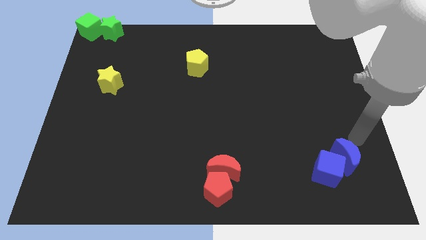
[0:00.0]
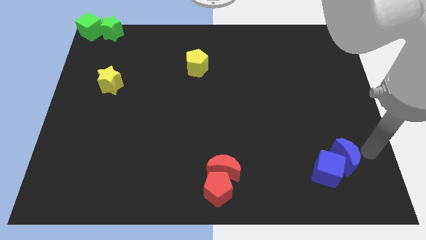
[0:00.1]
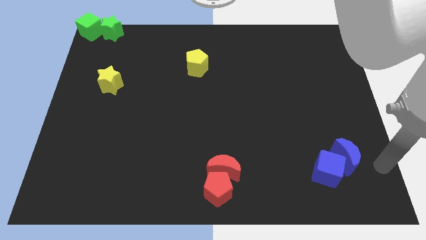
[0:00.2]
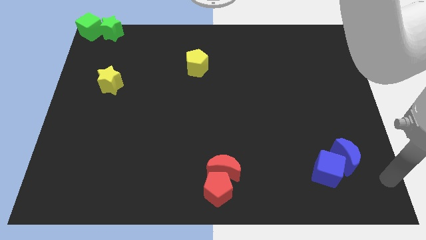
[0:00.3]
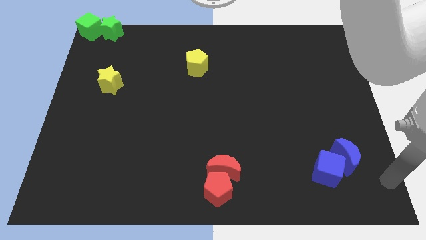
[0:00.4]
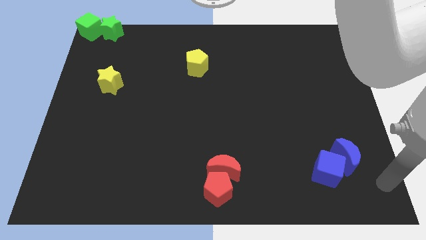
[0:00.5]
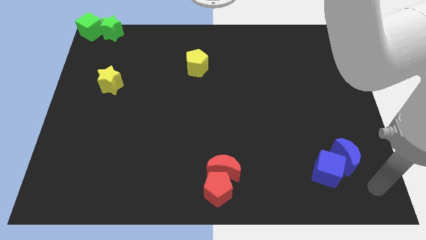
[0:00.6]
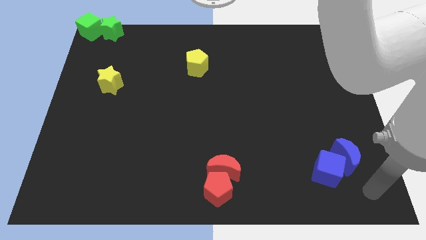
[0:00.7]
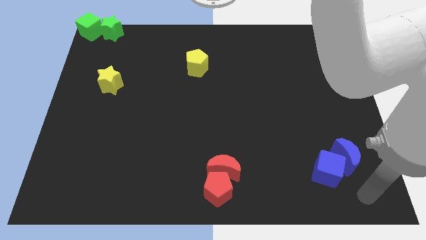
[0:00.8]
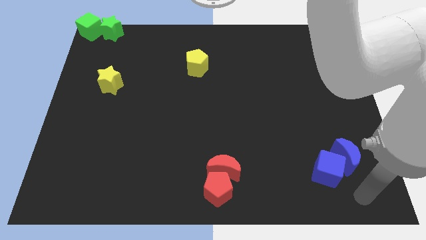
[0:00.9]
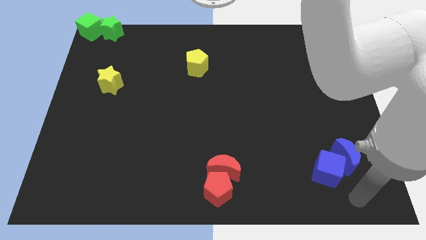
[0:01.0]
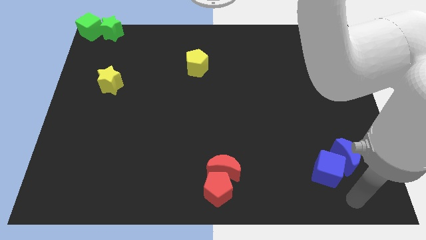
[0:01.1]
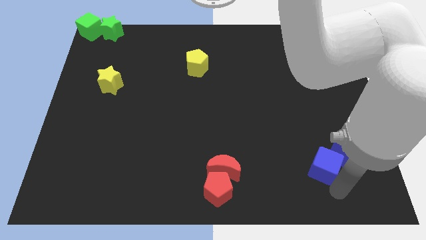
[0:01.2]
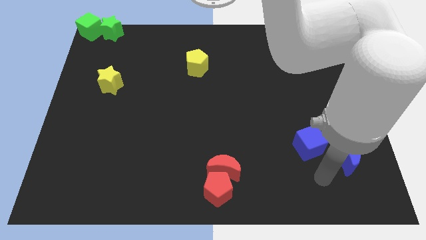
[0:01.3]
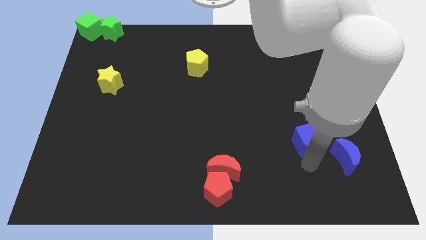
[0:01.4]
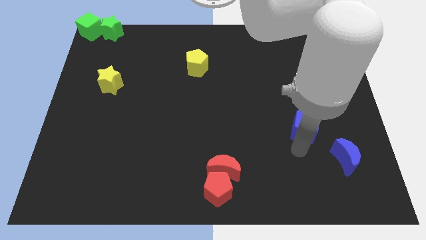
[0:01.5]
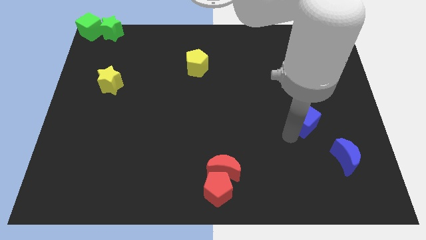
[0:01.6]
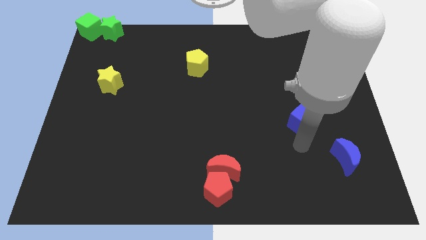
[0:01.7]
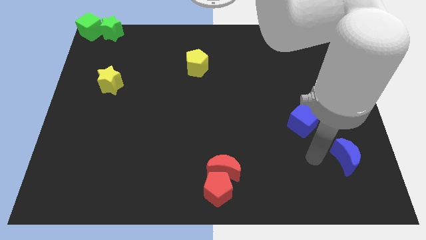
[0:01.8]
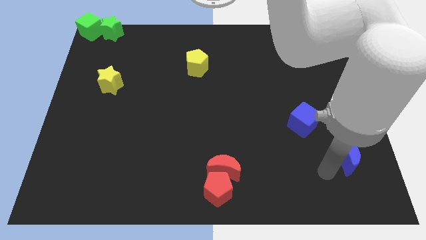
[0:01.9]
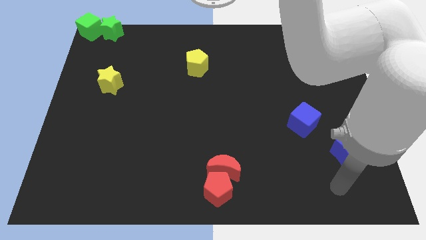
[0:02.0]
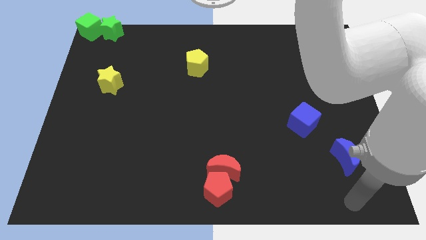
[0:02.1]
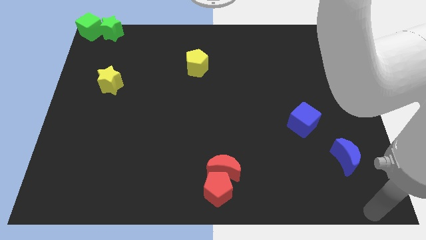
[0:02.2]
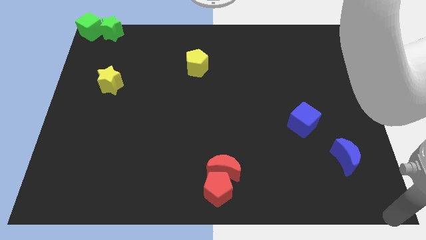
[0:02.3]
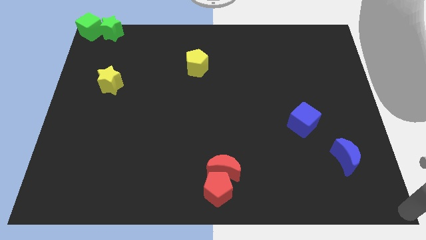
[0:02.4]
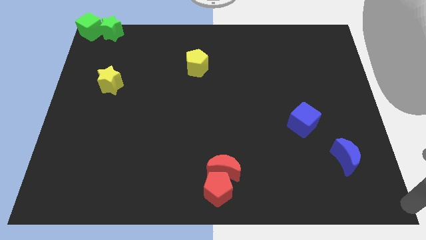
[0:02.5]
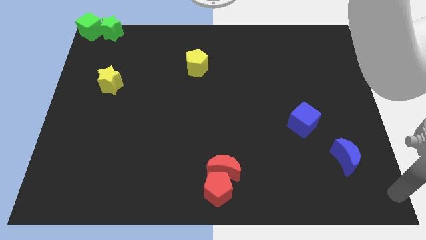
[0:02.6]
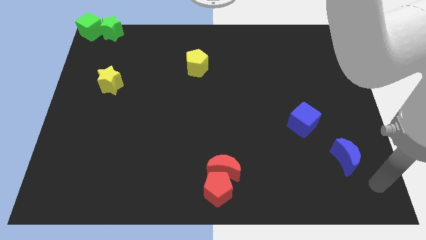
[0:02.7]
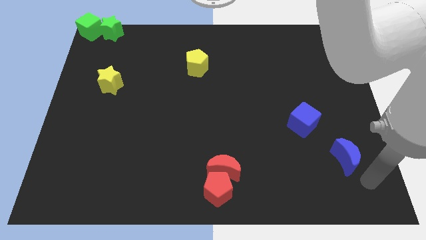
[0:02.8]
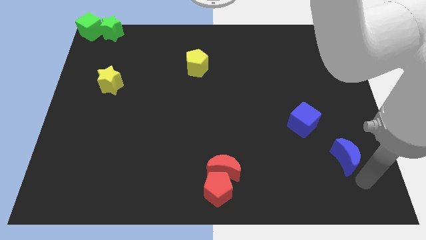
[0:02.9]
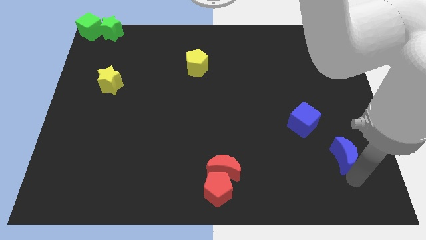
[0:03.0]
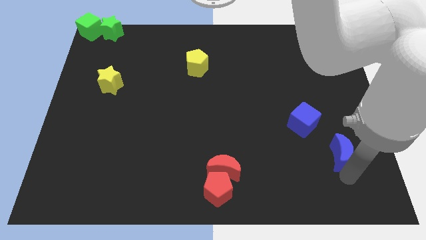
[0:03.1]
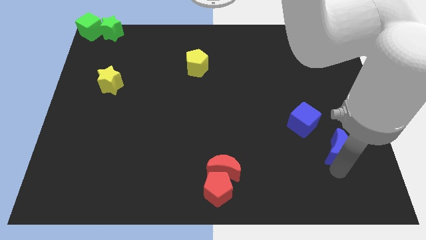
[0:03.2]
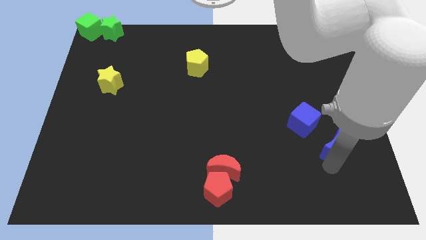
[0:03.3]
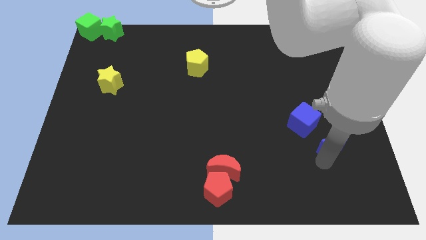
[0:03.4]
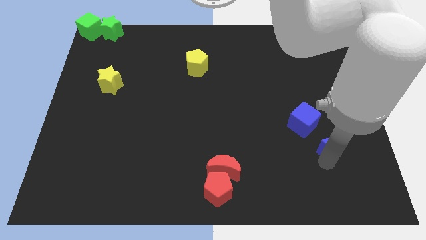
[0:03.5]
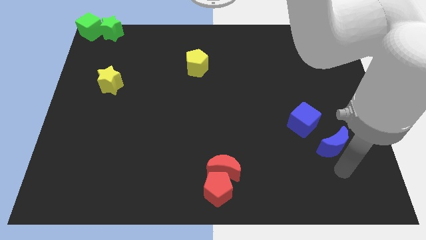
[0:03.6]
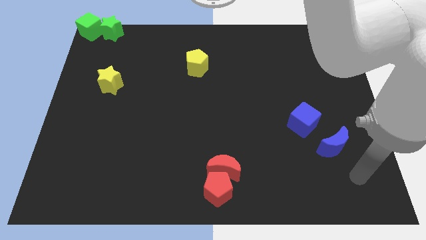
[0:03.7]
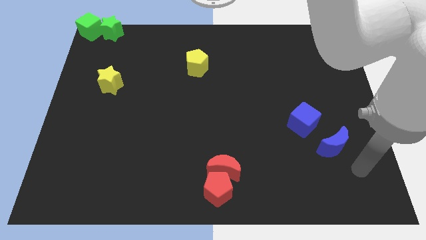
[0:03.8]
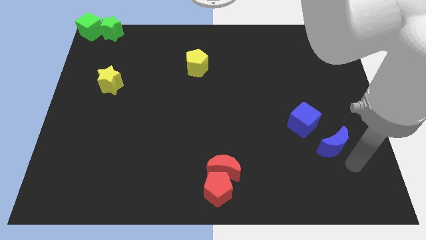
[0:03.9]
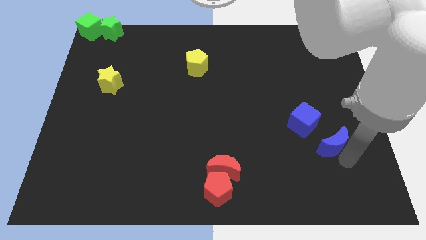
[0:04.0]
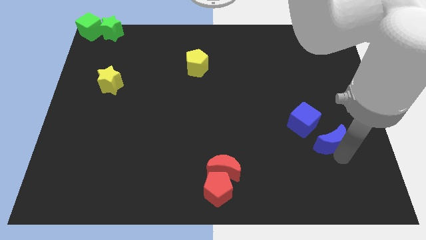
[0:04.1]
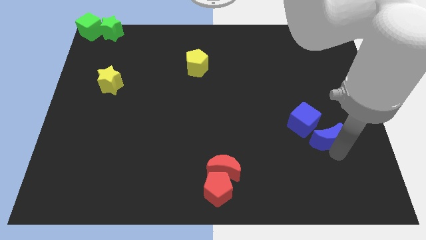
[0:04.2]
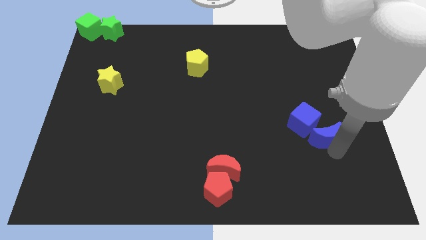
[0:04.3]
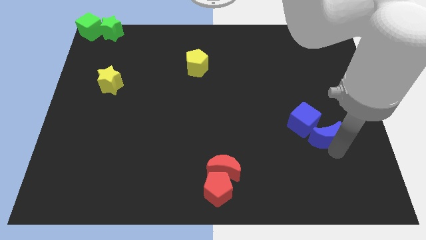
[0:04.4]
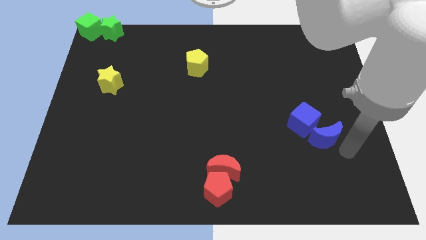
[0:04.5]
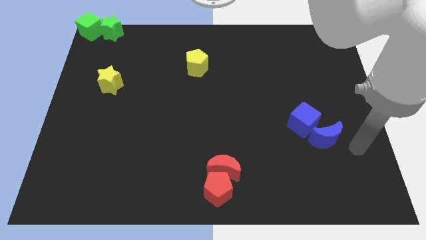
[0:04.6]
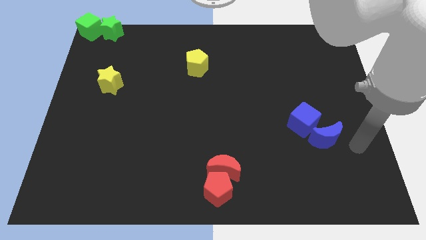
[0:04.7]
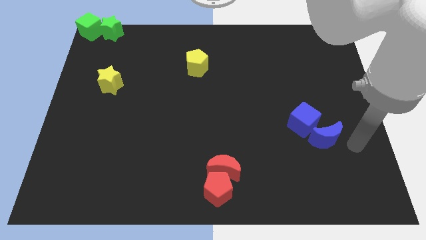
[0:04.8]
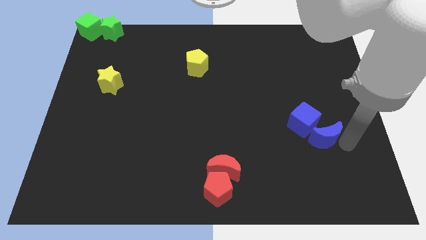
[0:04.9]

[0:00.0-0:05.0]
drag both the blue blocks diagonally on the top right side of the red blocks

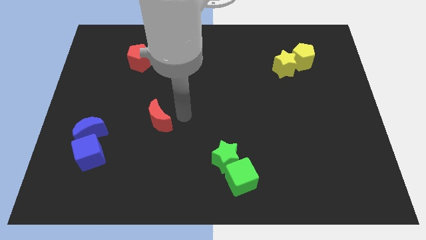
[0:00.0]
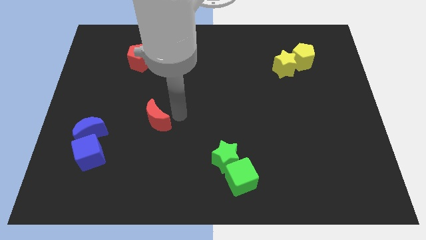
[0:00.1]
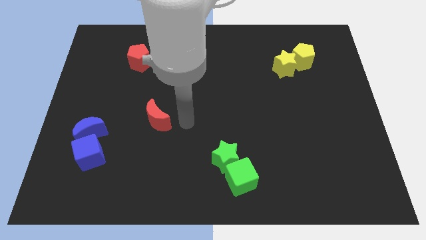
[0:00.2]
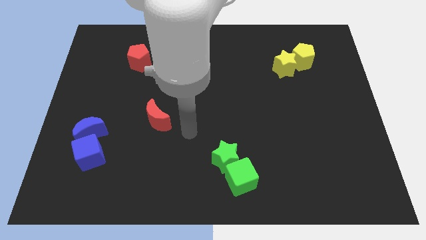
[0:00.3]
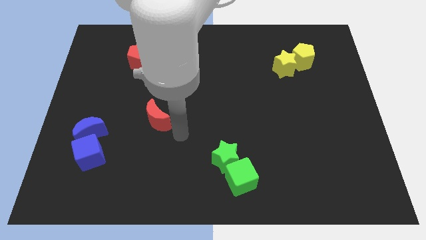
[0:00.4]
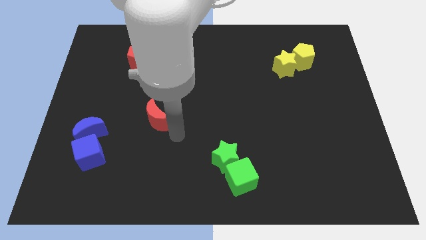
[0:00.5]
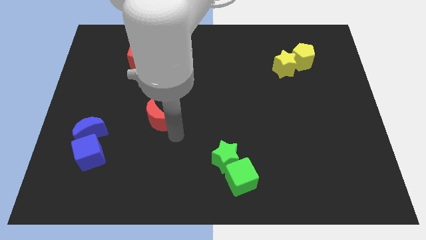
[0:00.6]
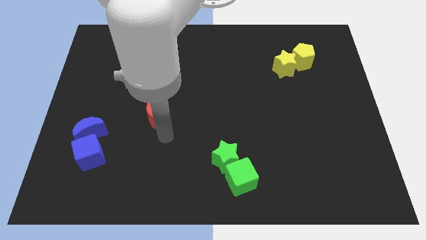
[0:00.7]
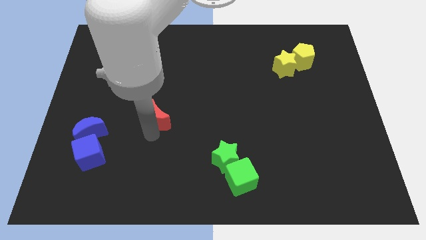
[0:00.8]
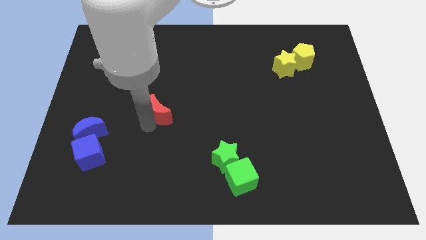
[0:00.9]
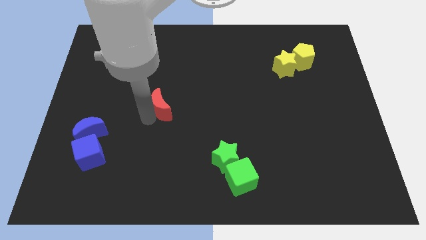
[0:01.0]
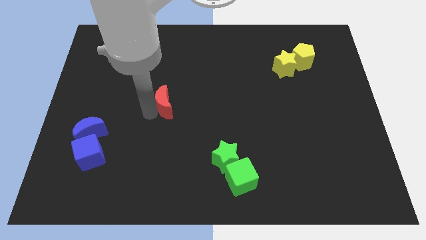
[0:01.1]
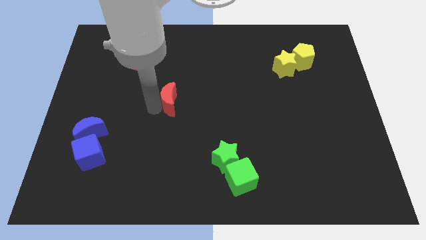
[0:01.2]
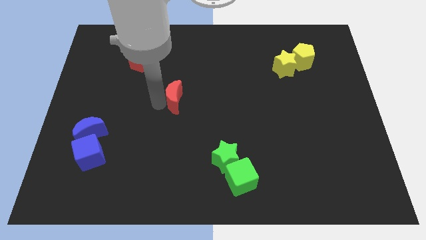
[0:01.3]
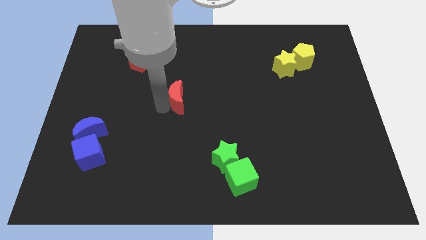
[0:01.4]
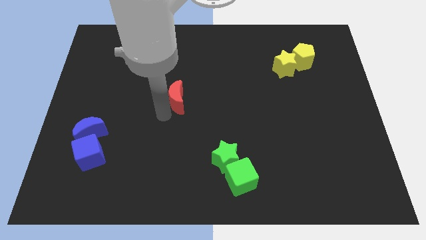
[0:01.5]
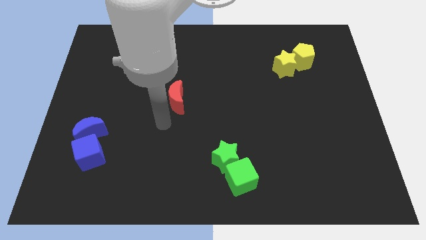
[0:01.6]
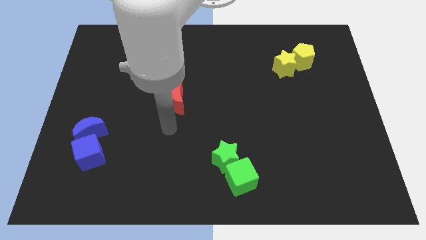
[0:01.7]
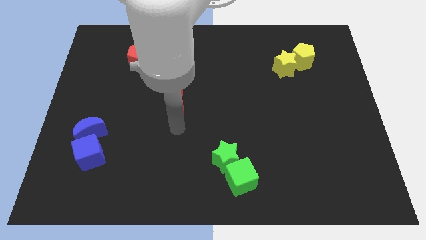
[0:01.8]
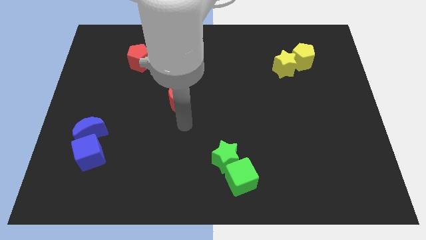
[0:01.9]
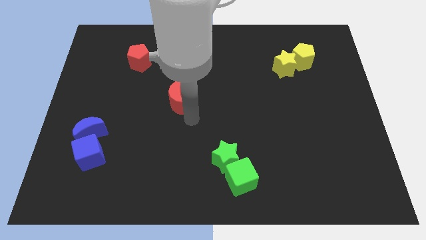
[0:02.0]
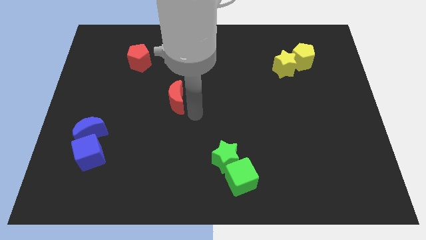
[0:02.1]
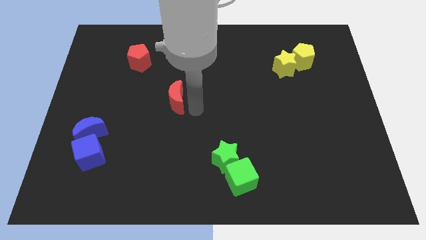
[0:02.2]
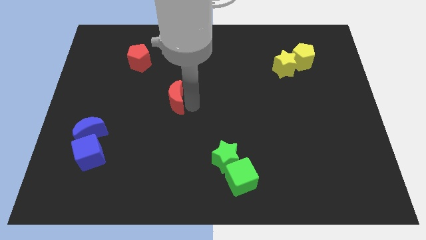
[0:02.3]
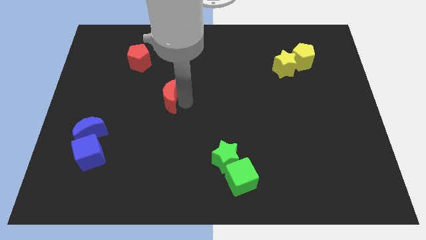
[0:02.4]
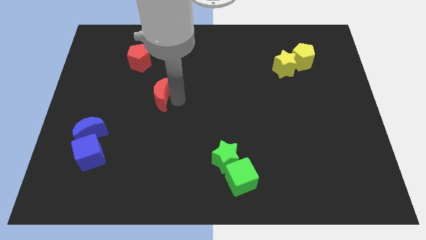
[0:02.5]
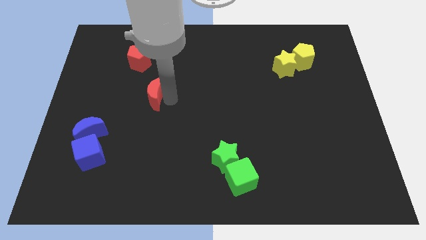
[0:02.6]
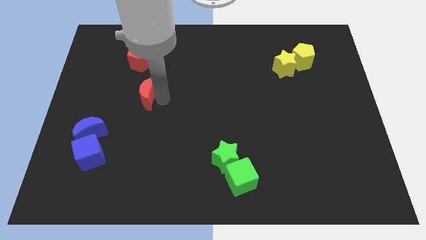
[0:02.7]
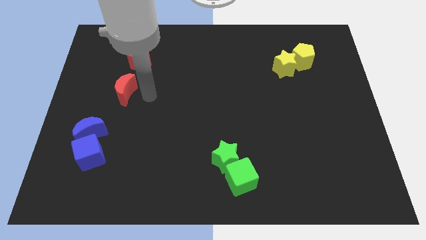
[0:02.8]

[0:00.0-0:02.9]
move the red crescent to the bottom of the red pentagon

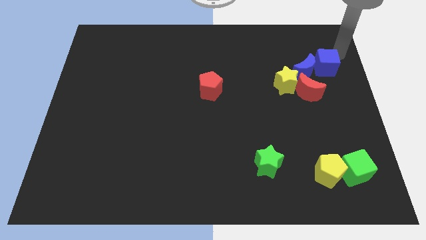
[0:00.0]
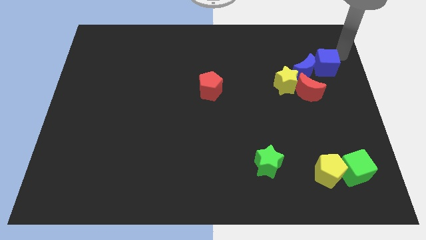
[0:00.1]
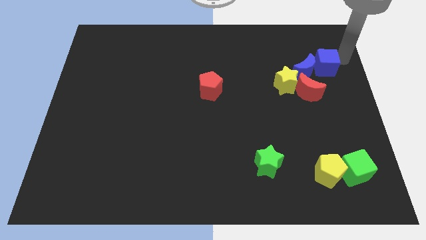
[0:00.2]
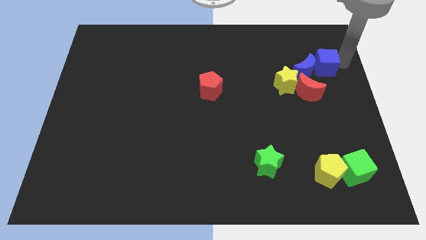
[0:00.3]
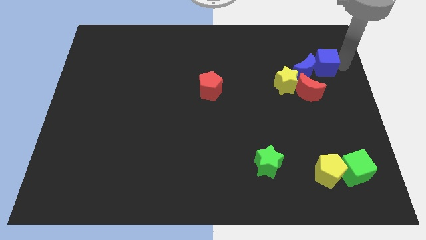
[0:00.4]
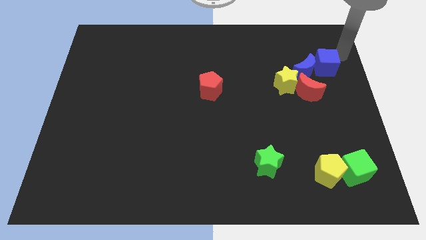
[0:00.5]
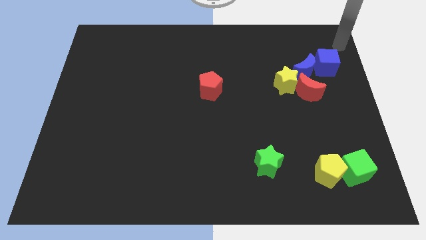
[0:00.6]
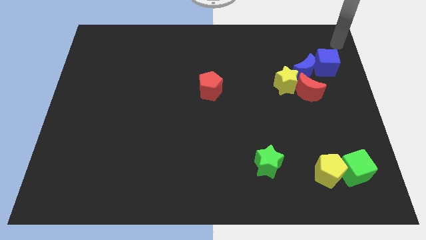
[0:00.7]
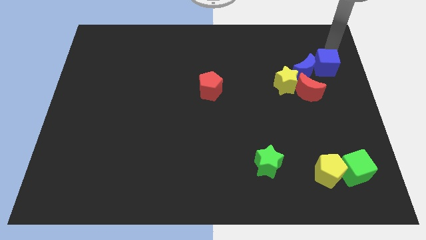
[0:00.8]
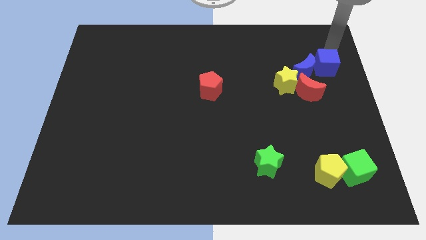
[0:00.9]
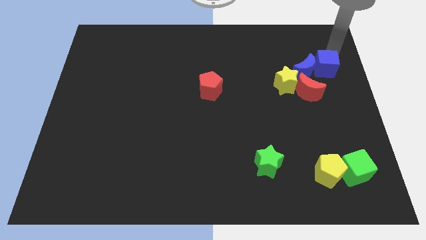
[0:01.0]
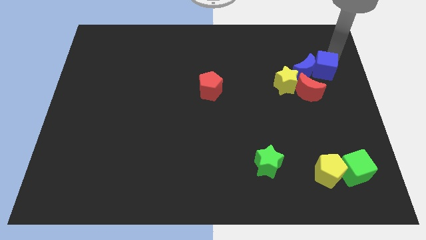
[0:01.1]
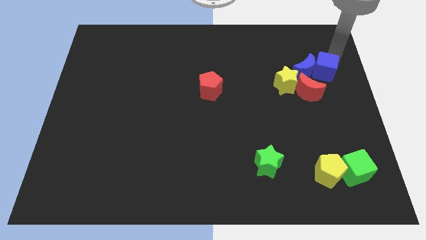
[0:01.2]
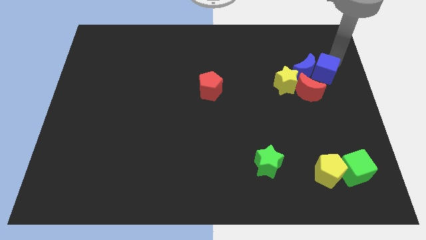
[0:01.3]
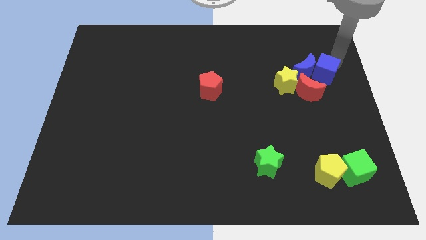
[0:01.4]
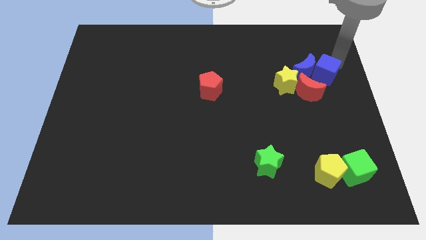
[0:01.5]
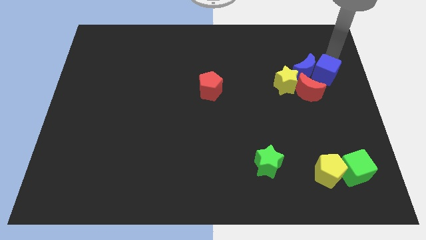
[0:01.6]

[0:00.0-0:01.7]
place blue cube near red crescent
